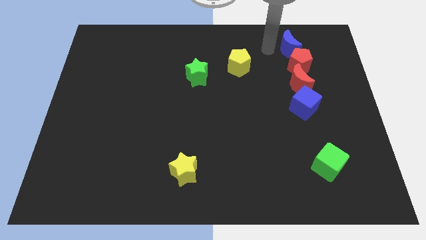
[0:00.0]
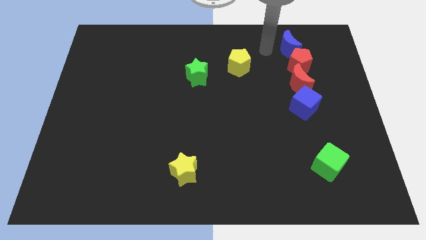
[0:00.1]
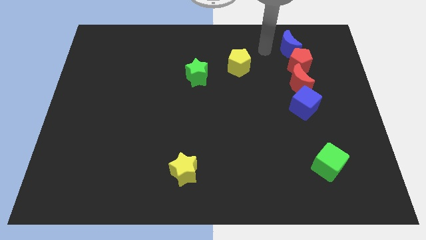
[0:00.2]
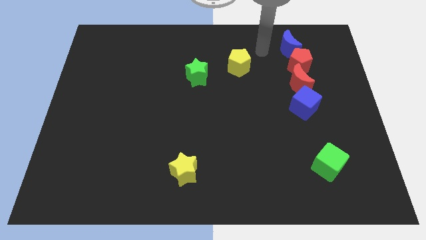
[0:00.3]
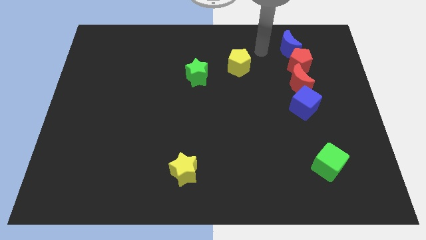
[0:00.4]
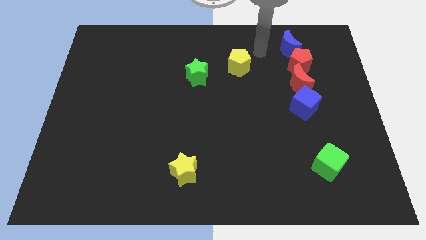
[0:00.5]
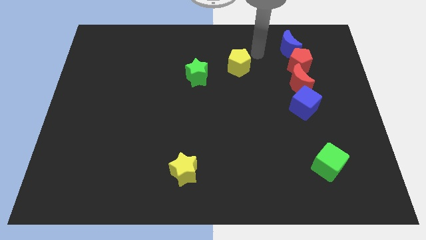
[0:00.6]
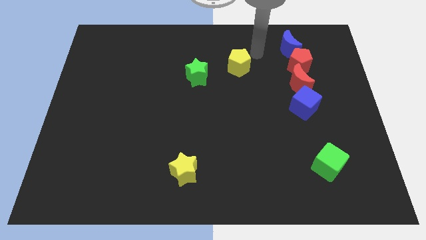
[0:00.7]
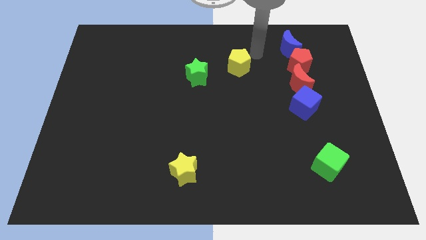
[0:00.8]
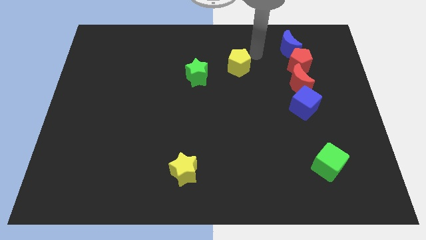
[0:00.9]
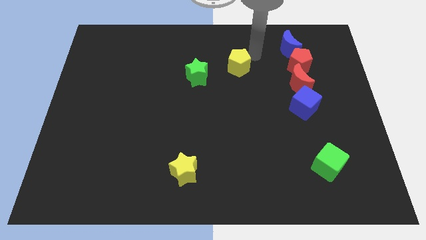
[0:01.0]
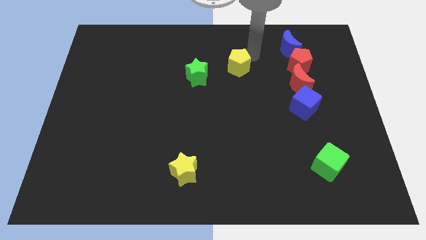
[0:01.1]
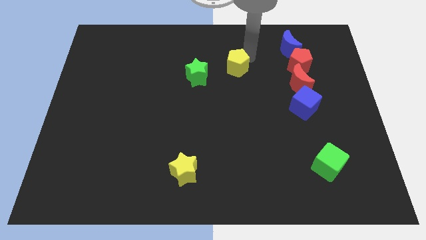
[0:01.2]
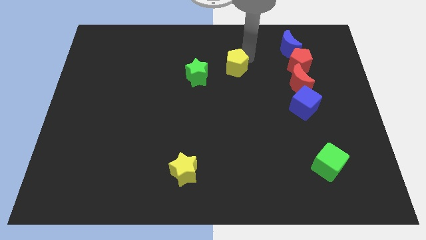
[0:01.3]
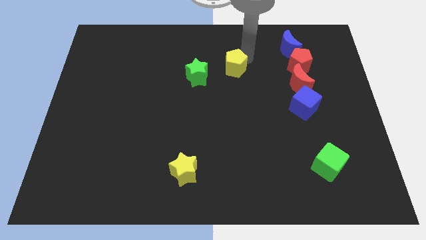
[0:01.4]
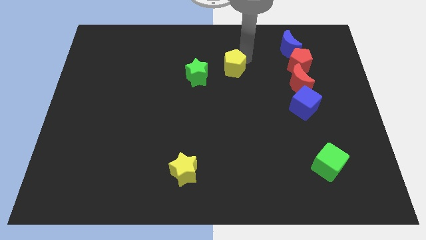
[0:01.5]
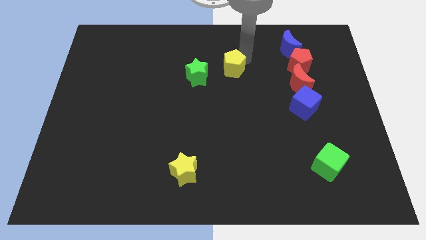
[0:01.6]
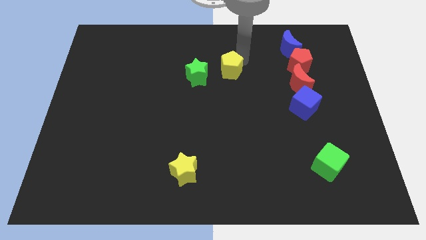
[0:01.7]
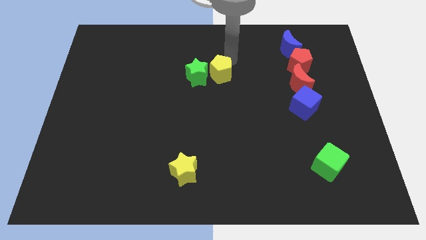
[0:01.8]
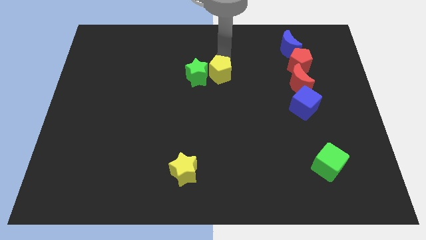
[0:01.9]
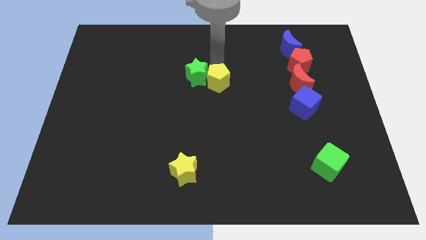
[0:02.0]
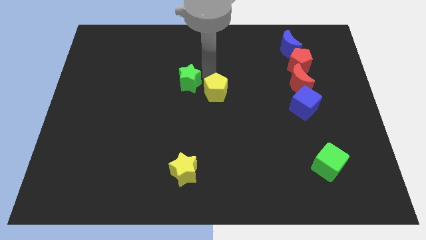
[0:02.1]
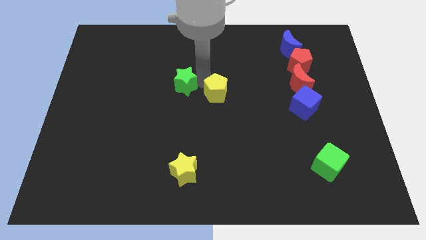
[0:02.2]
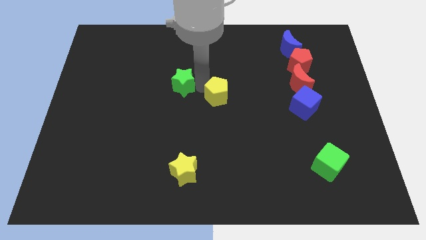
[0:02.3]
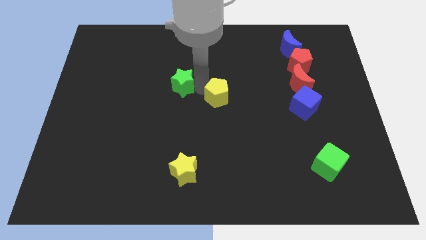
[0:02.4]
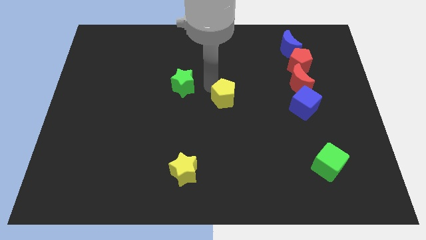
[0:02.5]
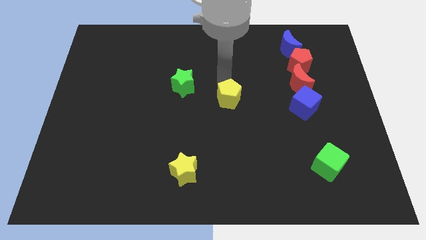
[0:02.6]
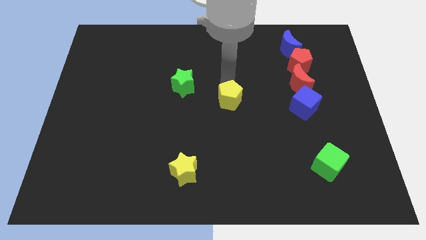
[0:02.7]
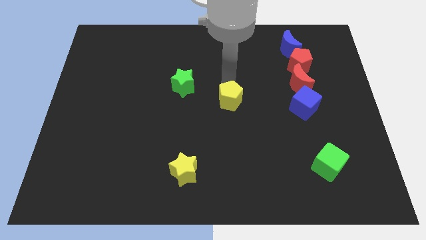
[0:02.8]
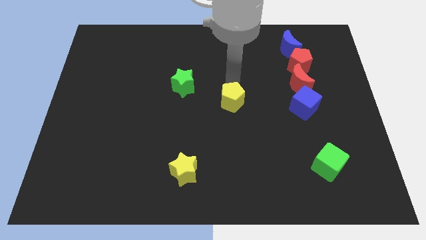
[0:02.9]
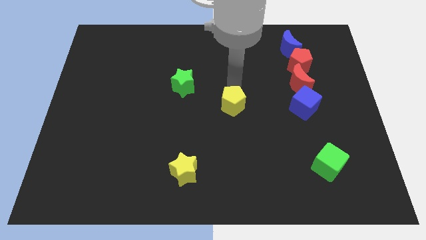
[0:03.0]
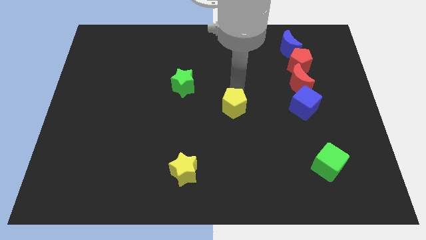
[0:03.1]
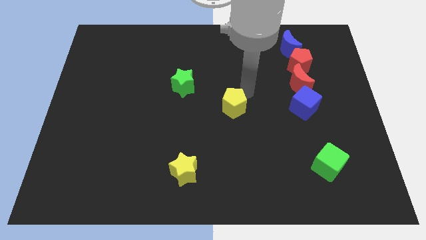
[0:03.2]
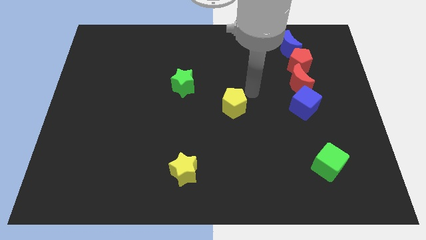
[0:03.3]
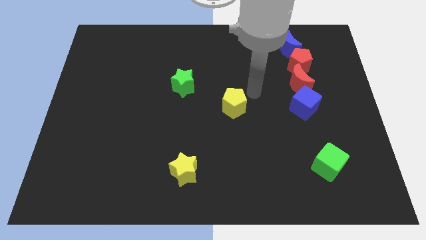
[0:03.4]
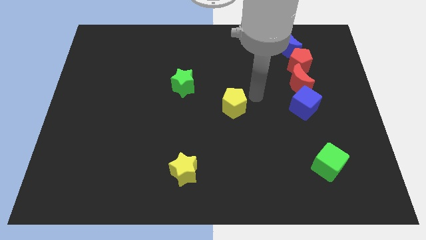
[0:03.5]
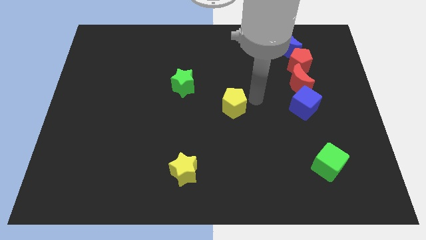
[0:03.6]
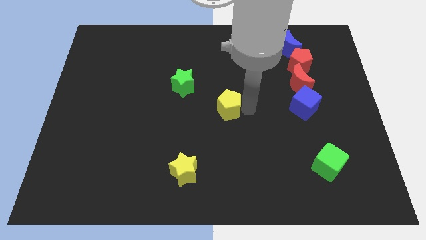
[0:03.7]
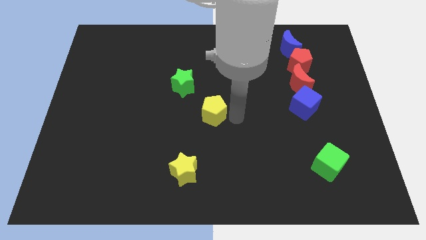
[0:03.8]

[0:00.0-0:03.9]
push the yellow pentagon to the center of the board

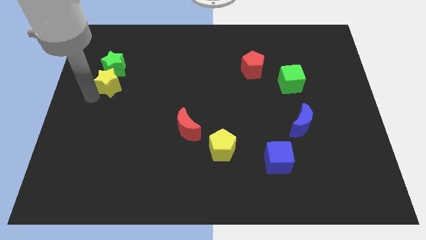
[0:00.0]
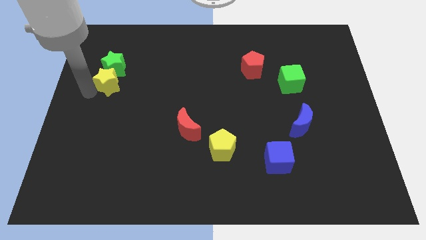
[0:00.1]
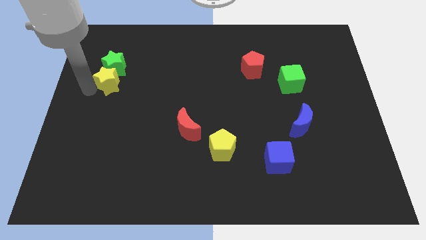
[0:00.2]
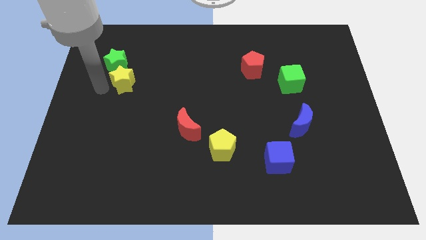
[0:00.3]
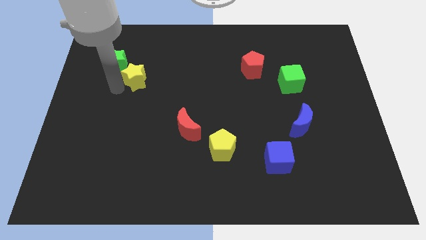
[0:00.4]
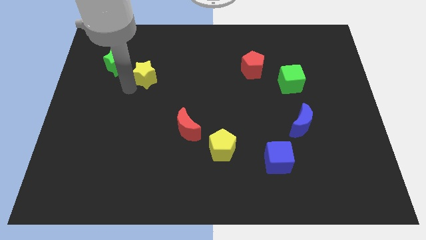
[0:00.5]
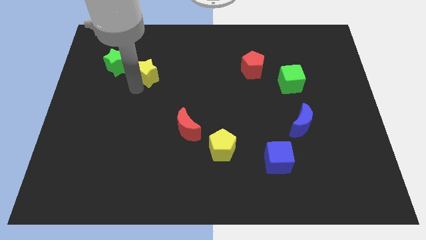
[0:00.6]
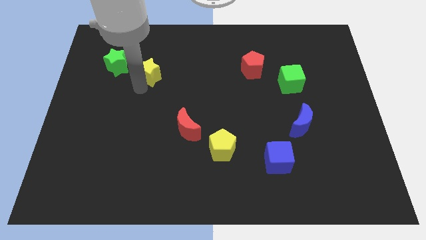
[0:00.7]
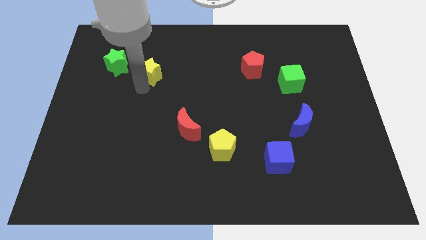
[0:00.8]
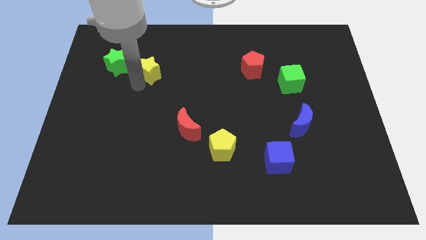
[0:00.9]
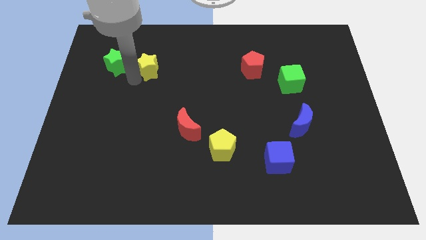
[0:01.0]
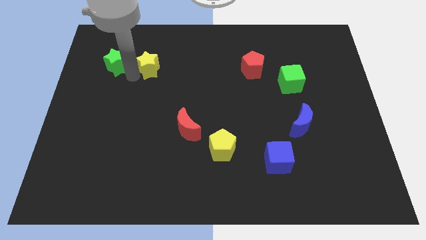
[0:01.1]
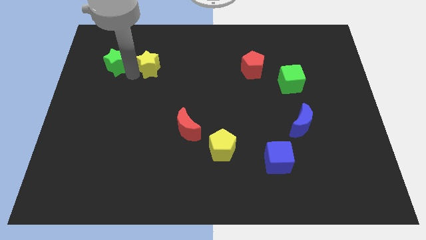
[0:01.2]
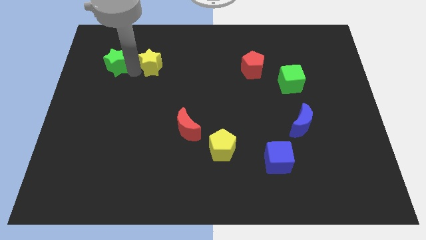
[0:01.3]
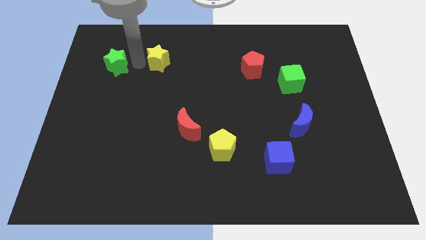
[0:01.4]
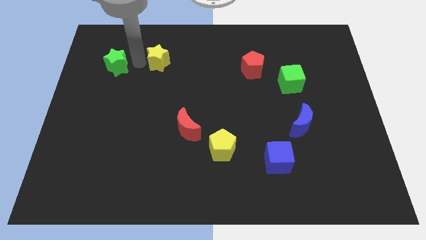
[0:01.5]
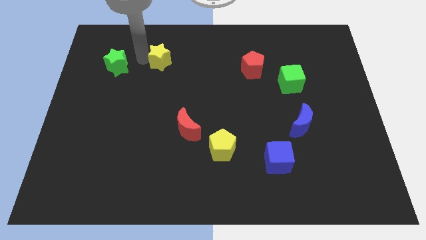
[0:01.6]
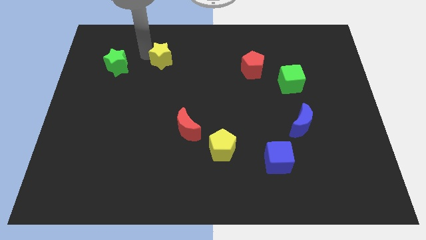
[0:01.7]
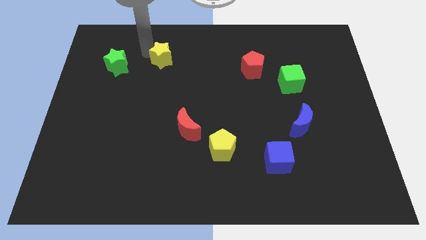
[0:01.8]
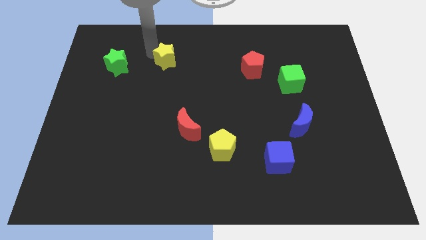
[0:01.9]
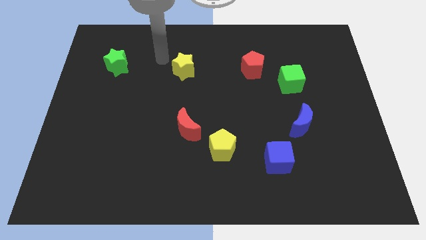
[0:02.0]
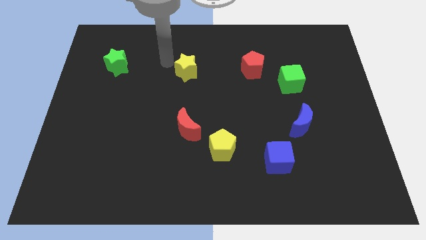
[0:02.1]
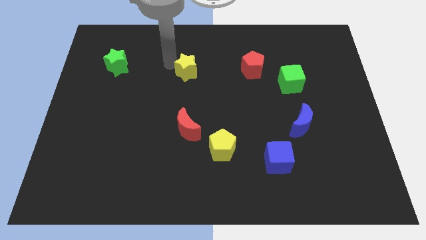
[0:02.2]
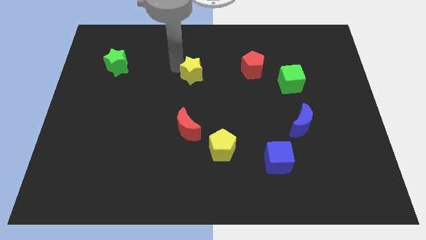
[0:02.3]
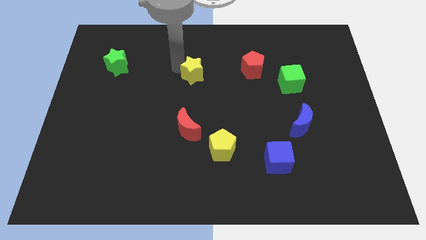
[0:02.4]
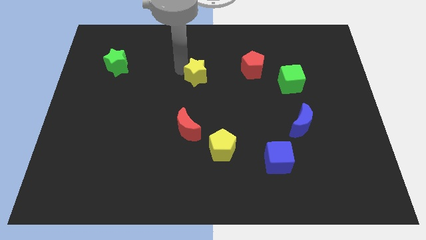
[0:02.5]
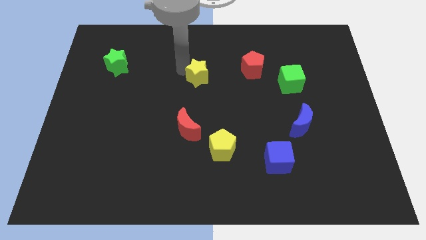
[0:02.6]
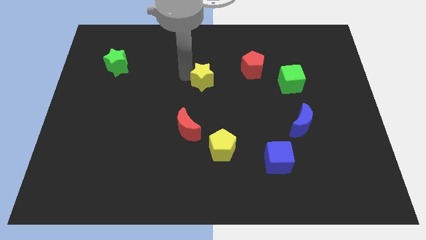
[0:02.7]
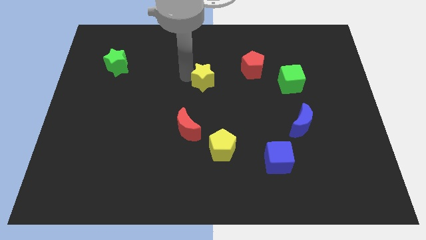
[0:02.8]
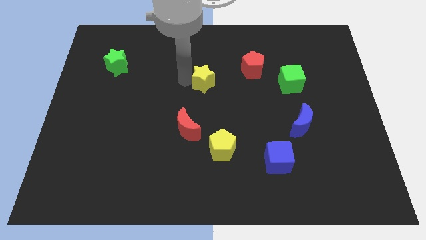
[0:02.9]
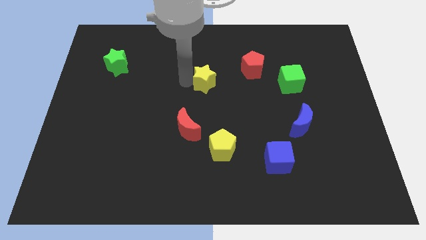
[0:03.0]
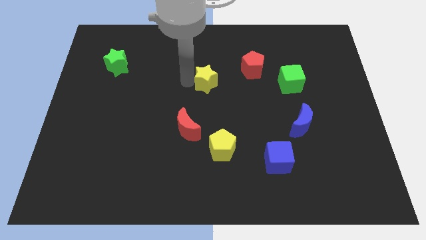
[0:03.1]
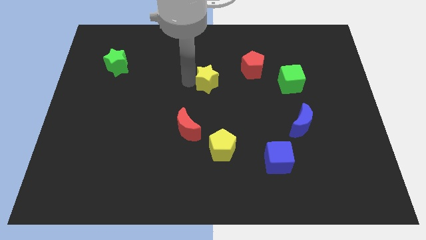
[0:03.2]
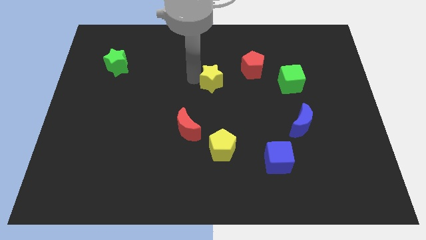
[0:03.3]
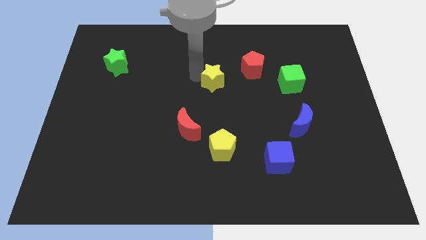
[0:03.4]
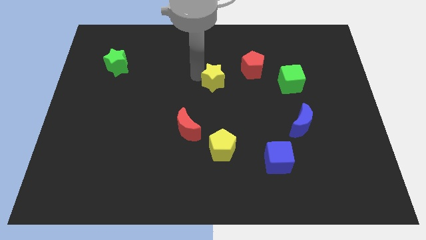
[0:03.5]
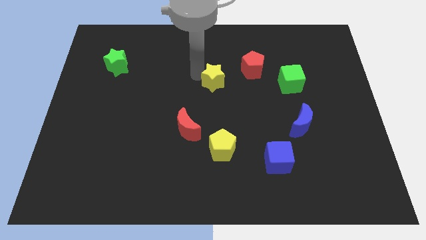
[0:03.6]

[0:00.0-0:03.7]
move the yellow star towards the top center of the board

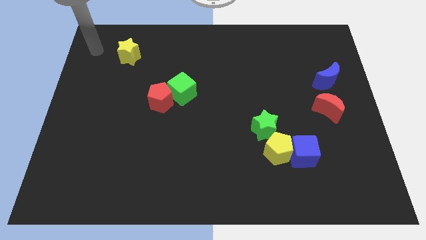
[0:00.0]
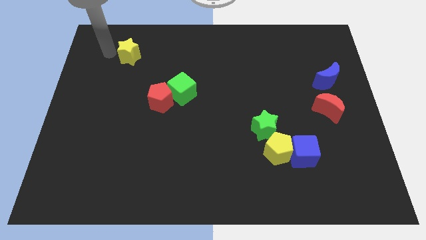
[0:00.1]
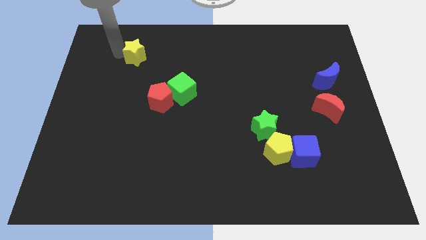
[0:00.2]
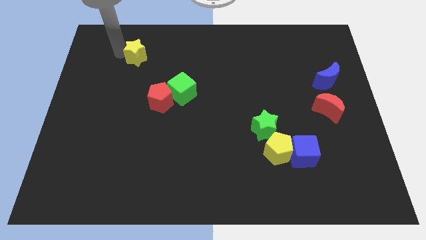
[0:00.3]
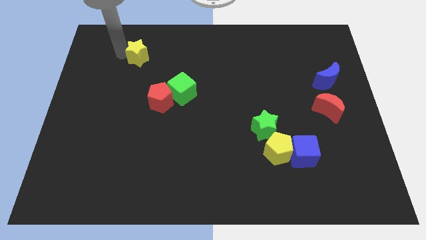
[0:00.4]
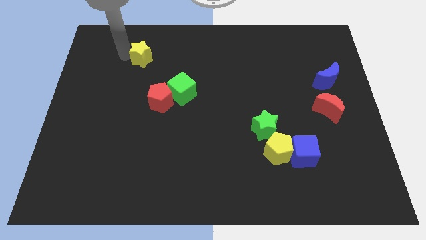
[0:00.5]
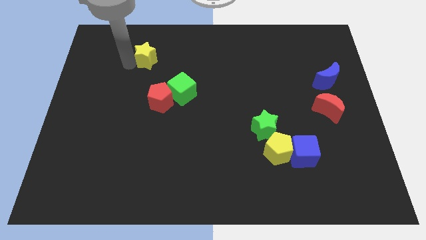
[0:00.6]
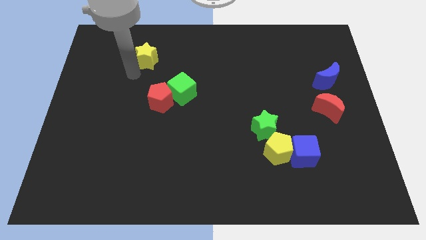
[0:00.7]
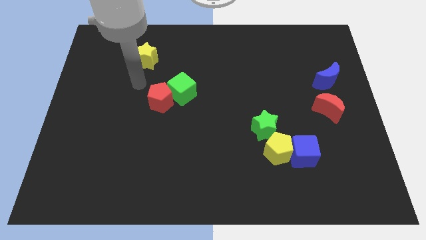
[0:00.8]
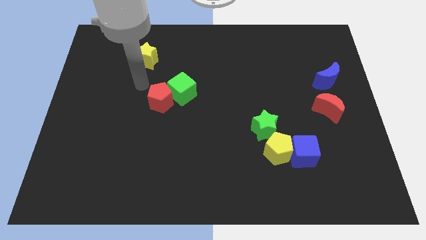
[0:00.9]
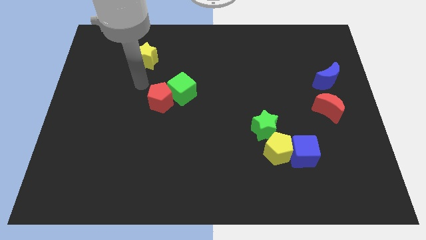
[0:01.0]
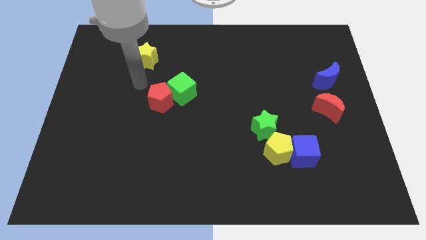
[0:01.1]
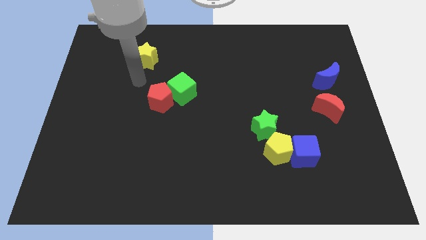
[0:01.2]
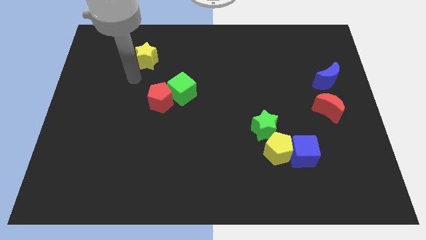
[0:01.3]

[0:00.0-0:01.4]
slightly push the yellow star to the right of the board
